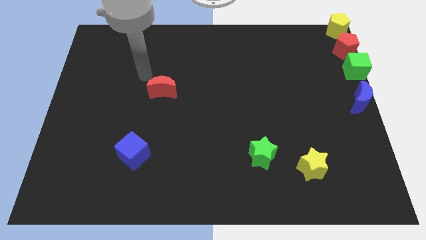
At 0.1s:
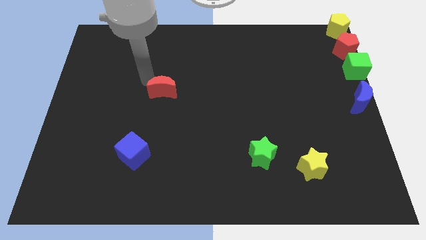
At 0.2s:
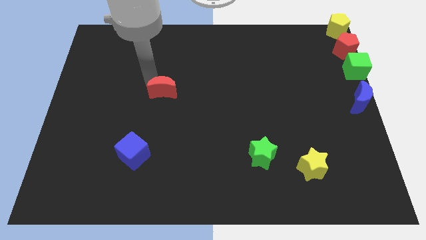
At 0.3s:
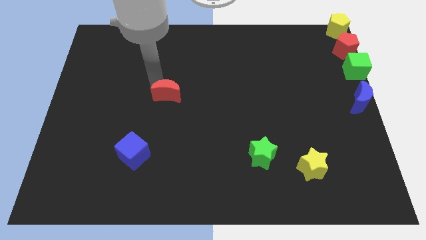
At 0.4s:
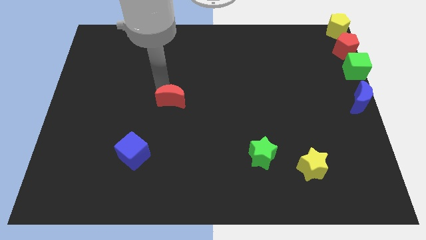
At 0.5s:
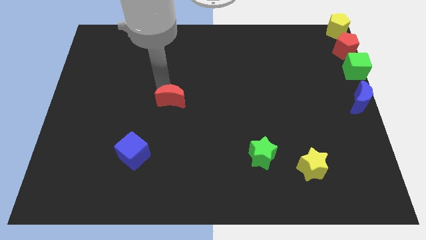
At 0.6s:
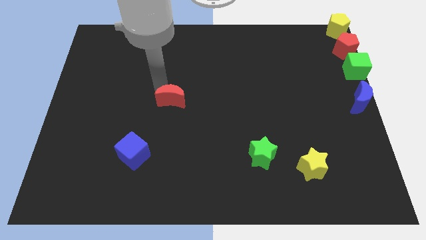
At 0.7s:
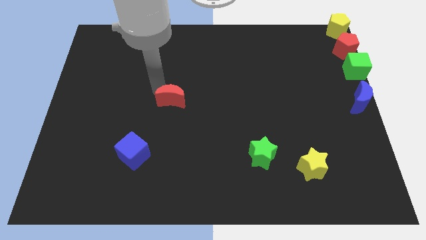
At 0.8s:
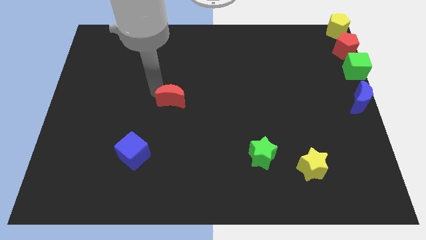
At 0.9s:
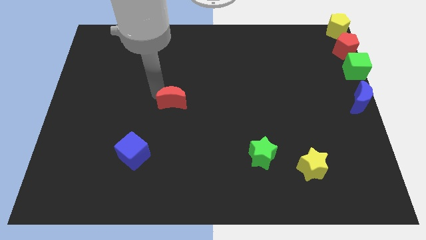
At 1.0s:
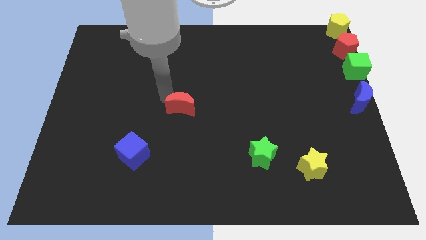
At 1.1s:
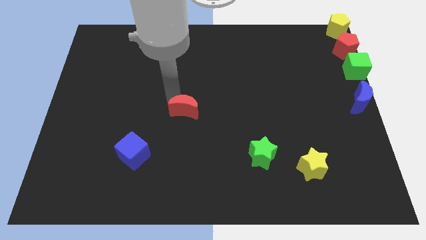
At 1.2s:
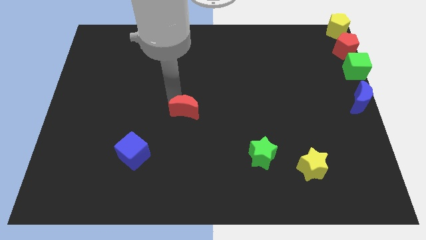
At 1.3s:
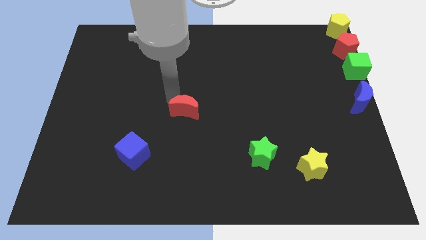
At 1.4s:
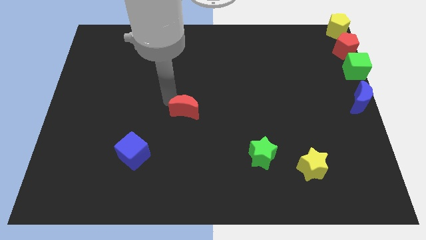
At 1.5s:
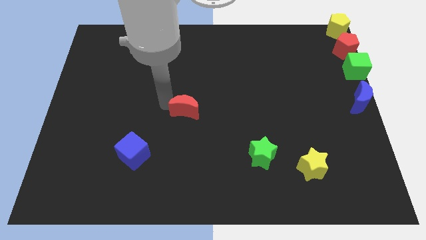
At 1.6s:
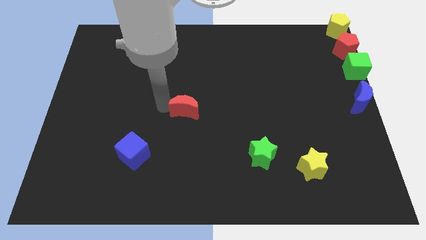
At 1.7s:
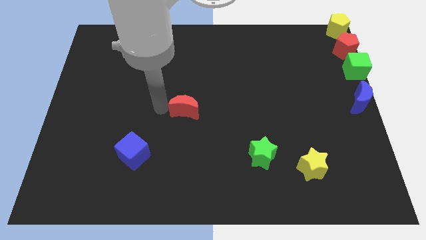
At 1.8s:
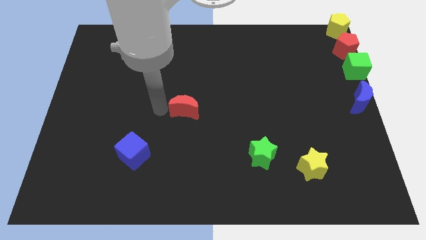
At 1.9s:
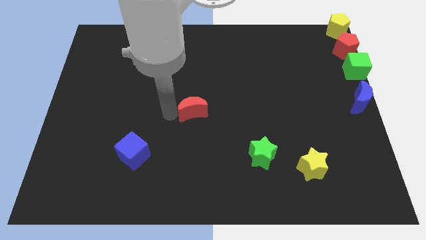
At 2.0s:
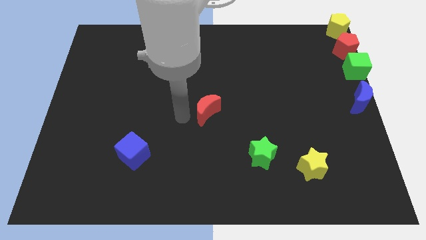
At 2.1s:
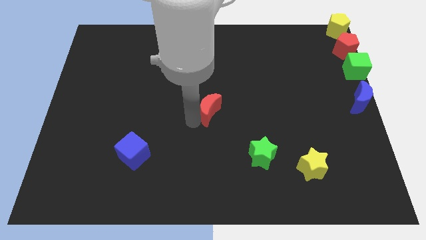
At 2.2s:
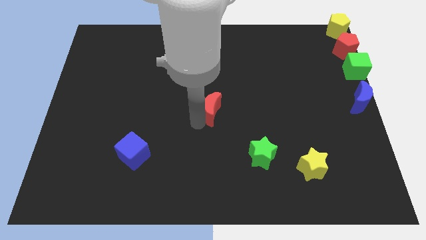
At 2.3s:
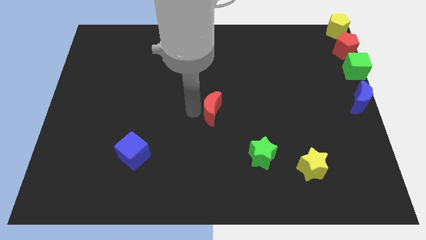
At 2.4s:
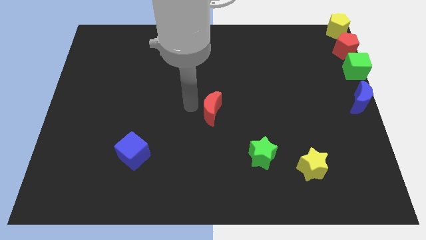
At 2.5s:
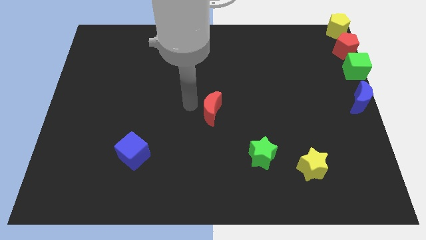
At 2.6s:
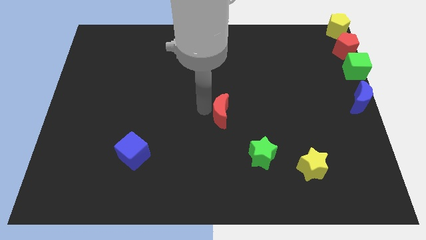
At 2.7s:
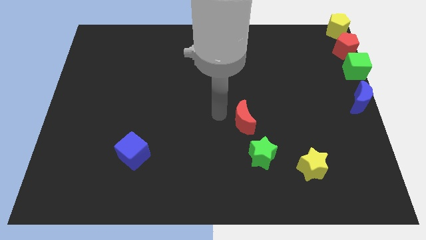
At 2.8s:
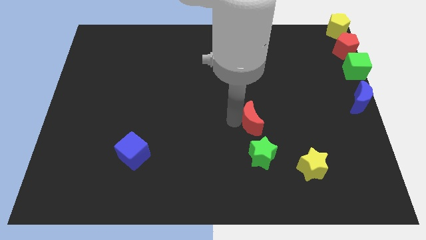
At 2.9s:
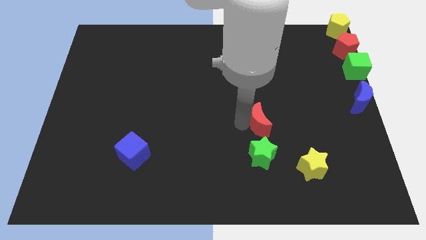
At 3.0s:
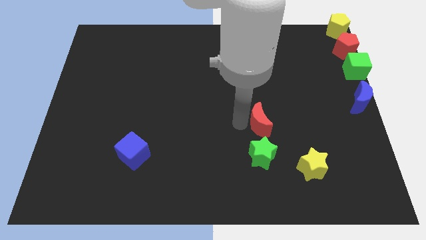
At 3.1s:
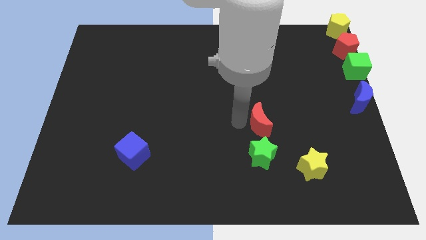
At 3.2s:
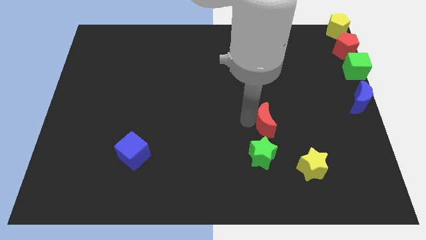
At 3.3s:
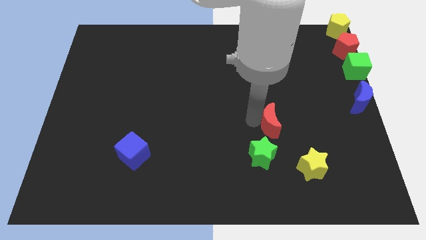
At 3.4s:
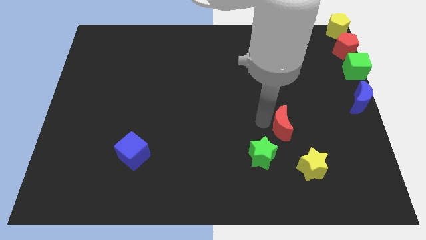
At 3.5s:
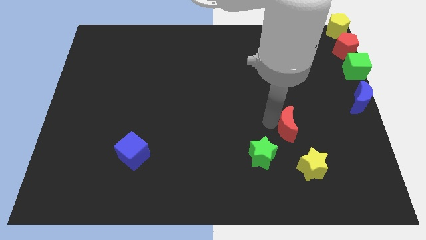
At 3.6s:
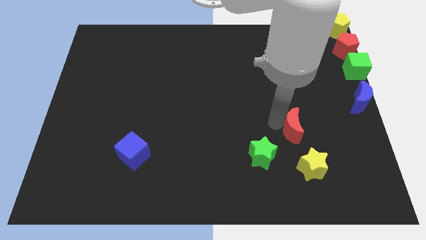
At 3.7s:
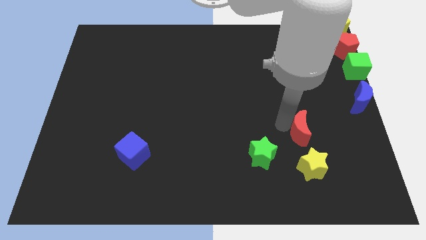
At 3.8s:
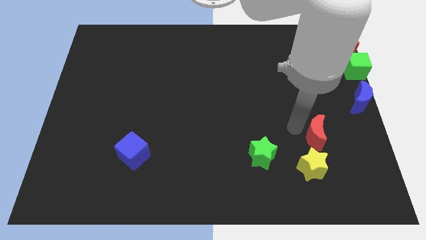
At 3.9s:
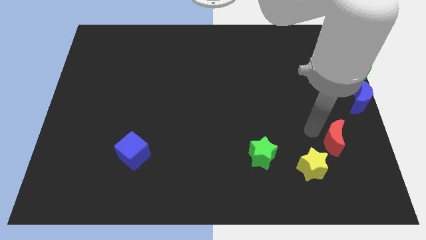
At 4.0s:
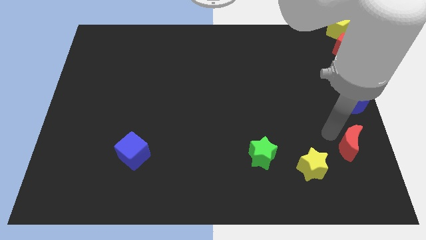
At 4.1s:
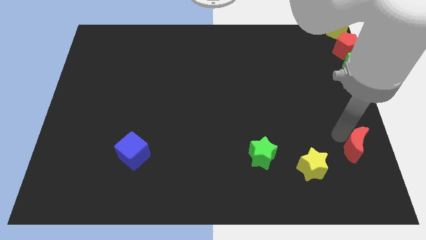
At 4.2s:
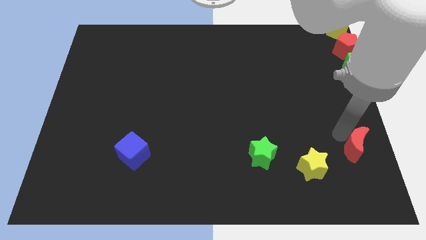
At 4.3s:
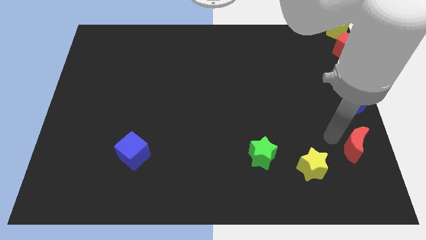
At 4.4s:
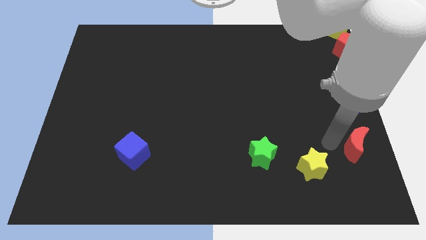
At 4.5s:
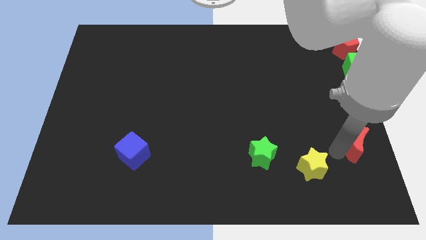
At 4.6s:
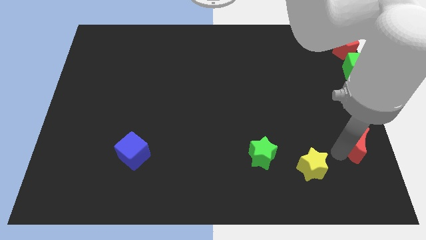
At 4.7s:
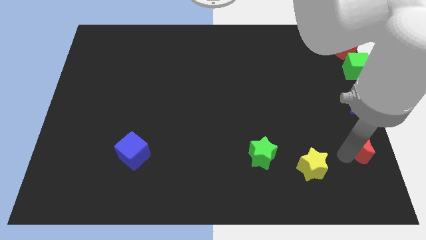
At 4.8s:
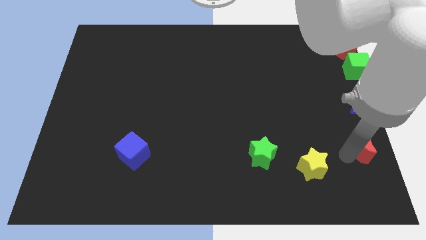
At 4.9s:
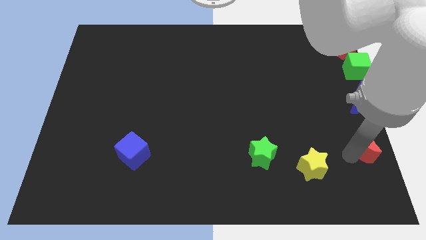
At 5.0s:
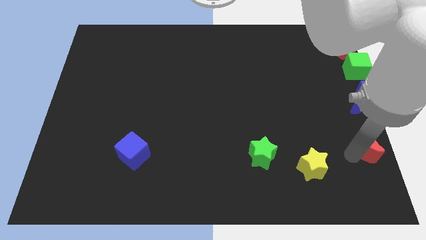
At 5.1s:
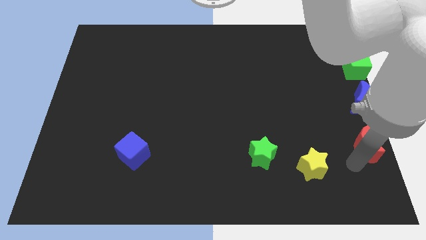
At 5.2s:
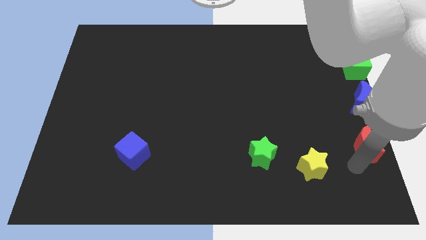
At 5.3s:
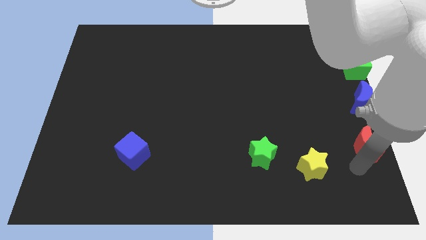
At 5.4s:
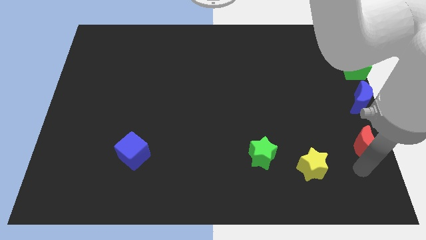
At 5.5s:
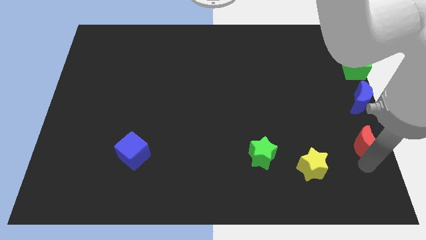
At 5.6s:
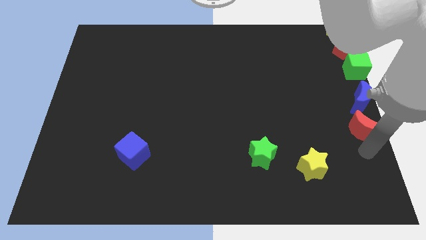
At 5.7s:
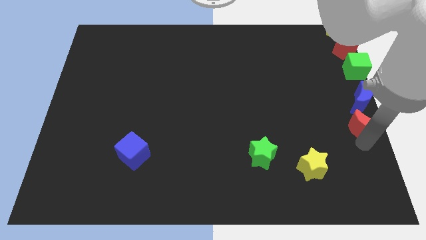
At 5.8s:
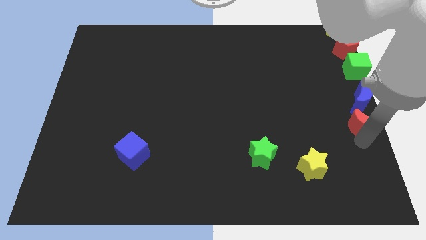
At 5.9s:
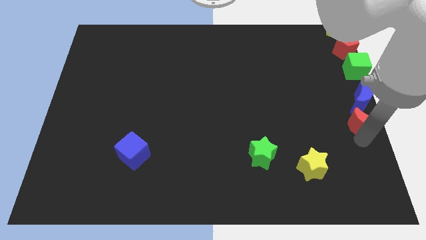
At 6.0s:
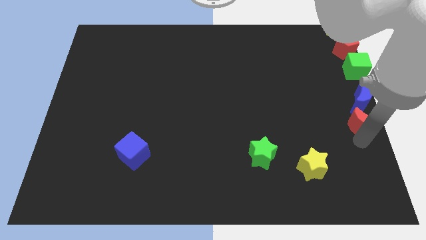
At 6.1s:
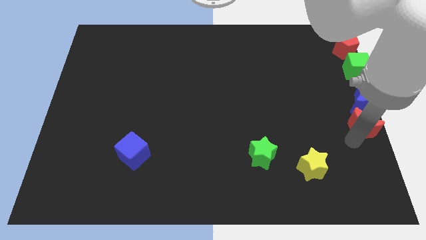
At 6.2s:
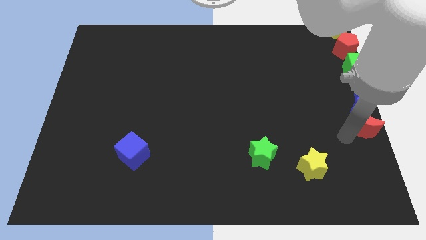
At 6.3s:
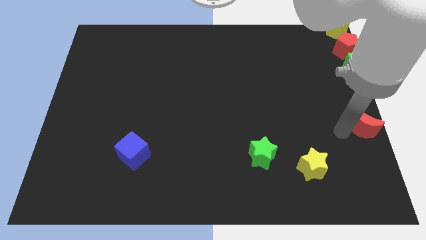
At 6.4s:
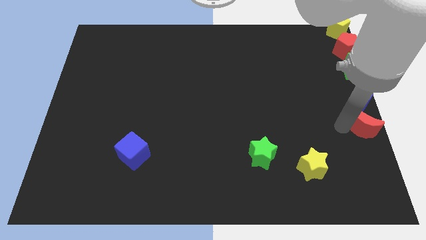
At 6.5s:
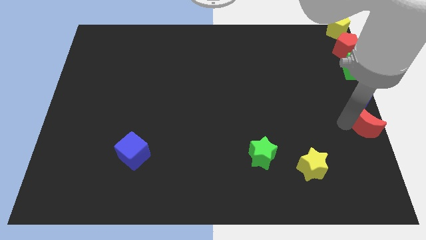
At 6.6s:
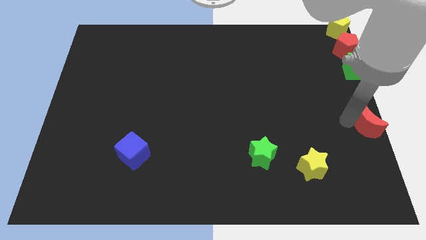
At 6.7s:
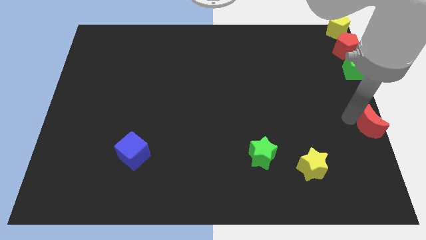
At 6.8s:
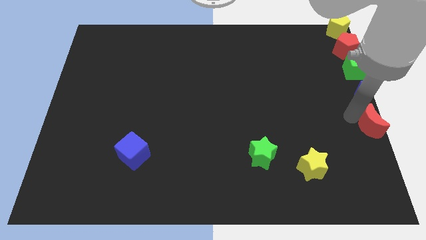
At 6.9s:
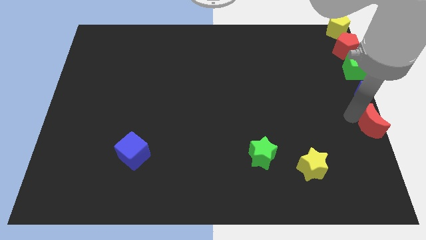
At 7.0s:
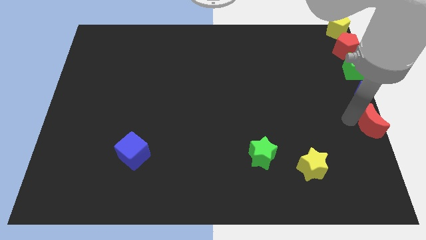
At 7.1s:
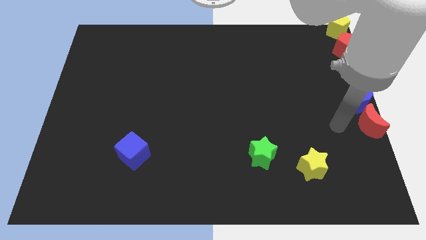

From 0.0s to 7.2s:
push the red crescent to the bottom of the blue crescent

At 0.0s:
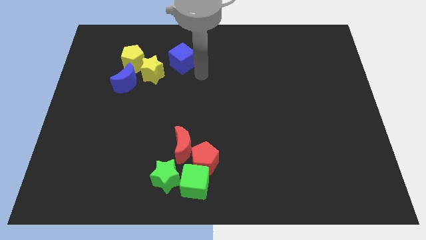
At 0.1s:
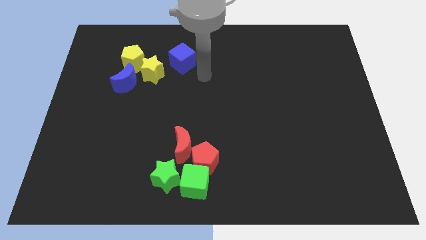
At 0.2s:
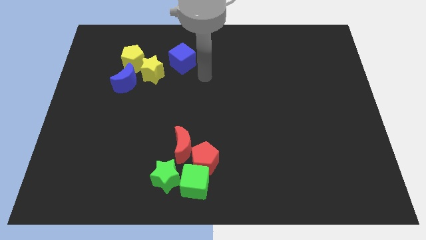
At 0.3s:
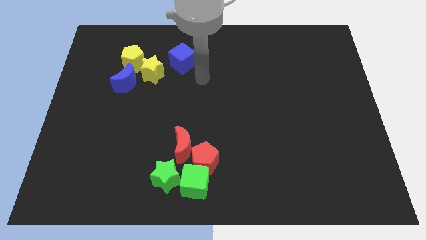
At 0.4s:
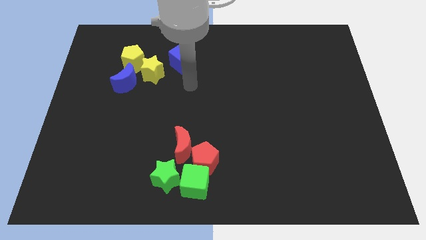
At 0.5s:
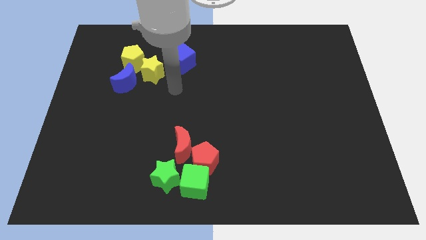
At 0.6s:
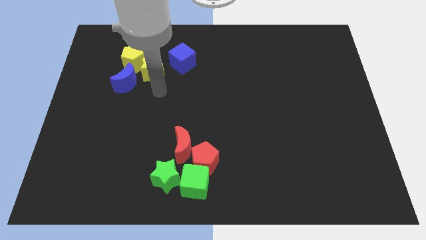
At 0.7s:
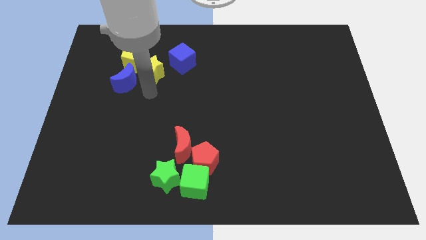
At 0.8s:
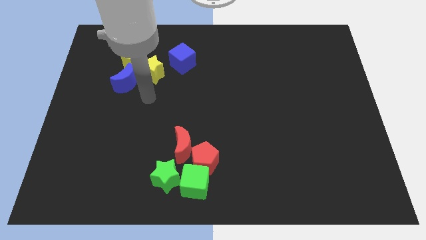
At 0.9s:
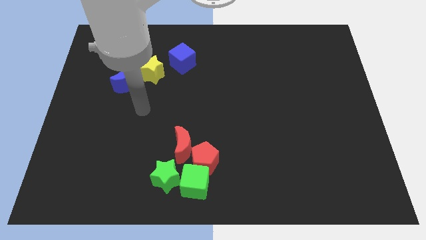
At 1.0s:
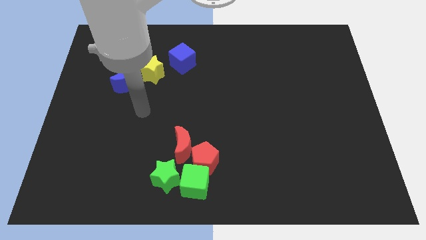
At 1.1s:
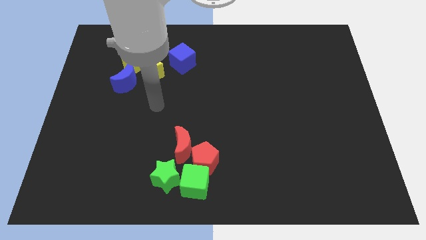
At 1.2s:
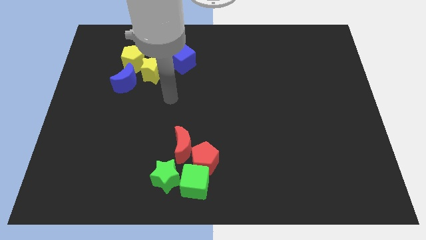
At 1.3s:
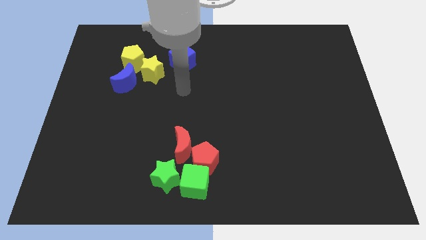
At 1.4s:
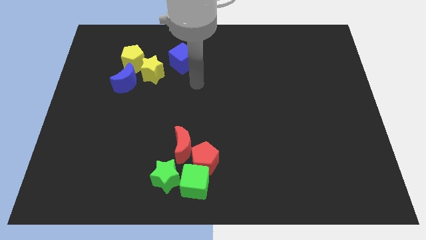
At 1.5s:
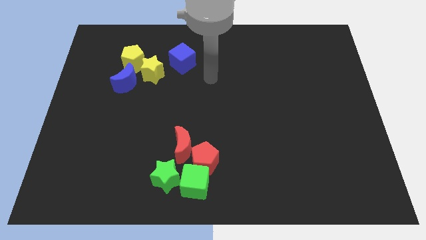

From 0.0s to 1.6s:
point your hand at the bottom right side of the blue cube

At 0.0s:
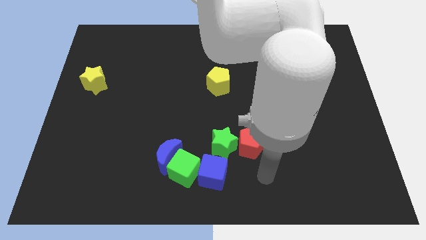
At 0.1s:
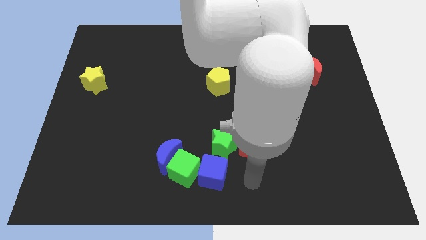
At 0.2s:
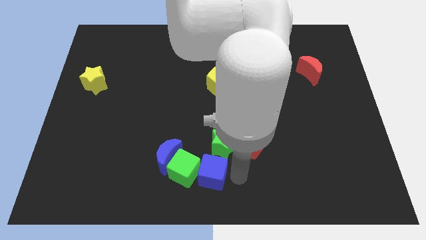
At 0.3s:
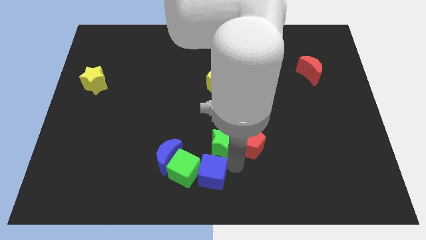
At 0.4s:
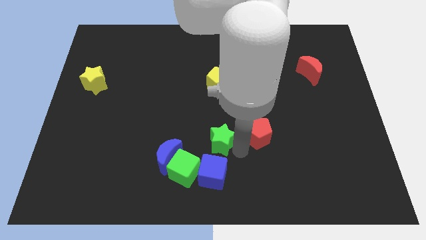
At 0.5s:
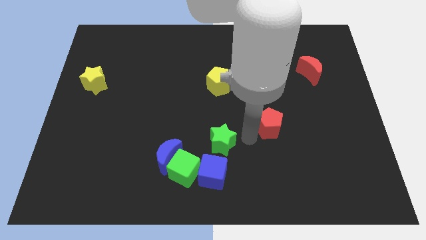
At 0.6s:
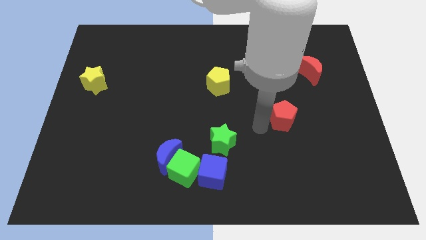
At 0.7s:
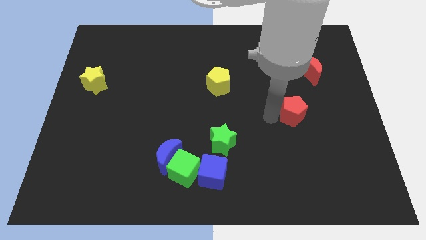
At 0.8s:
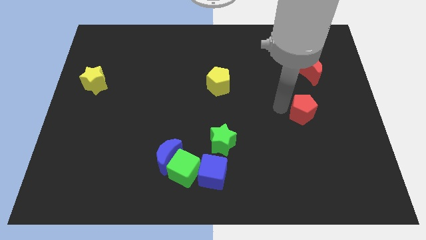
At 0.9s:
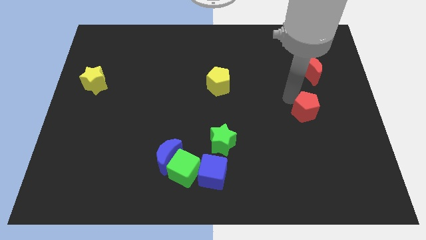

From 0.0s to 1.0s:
move the red pentagon away from the green star
